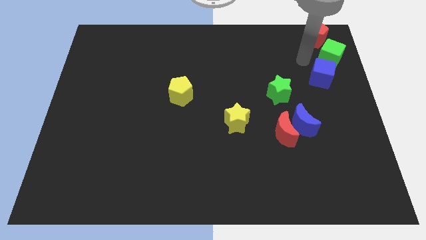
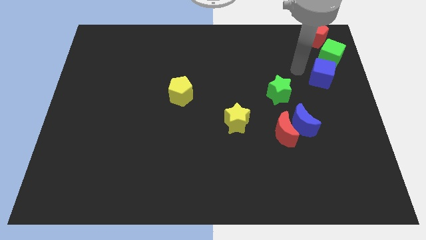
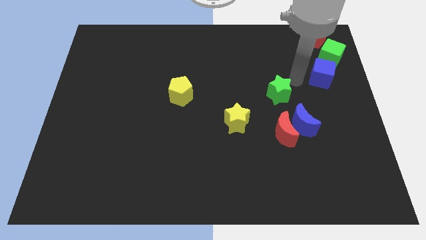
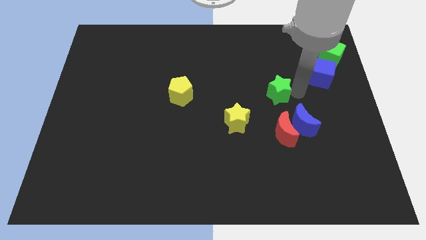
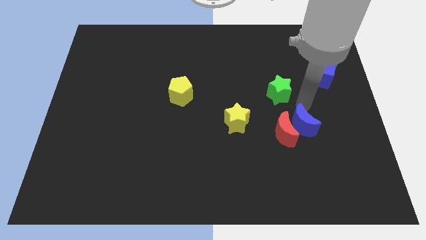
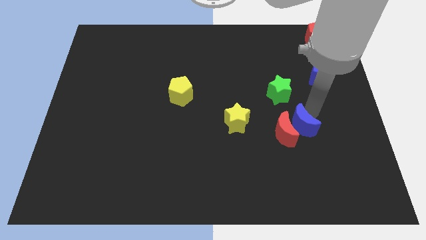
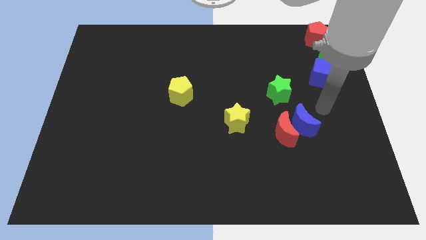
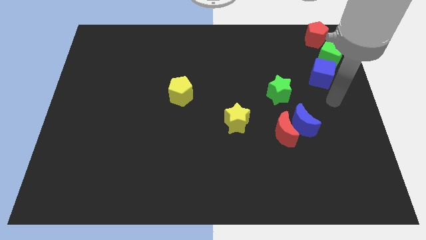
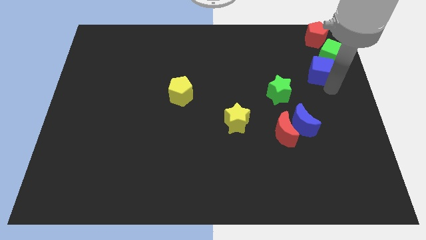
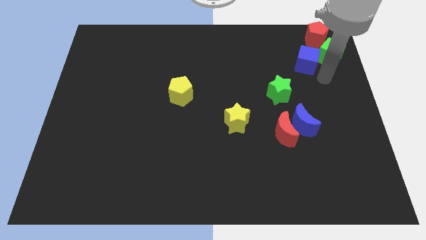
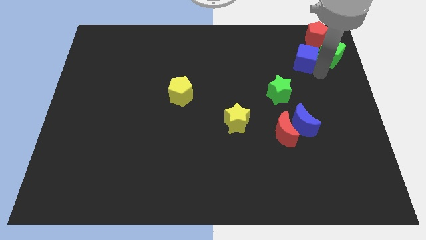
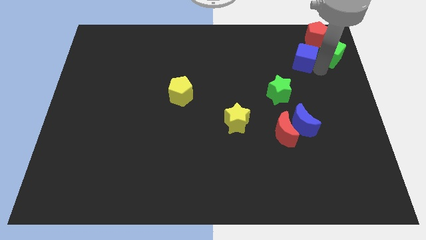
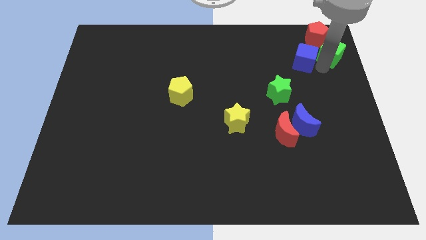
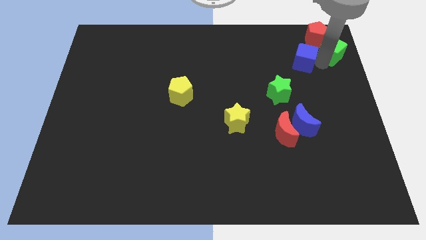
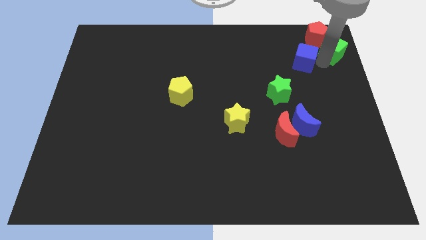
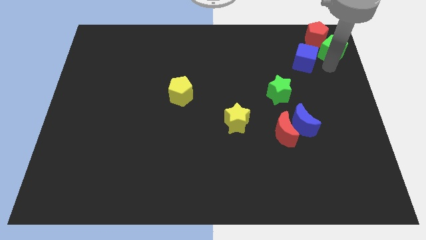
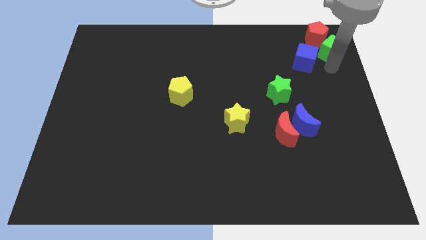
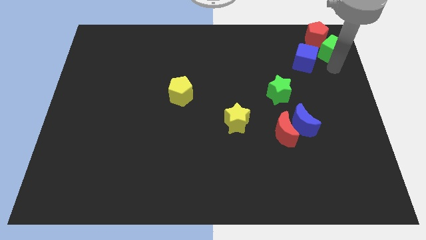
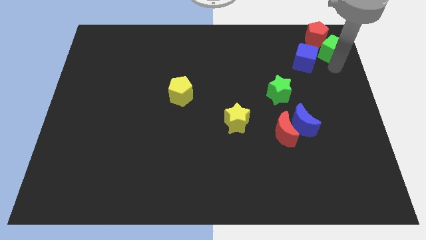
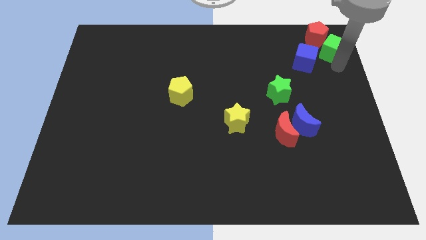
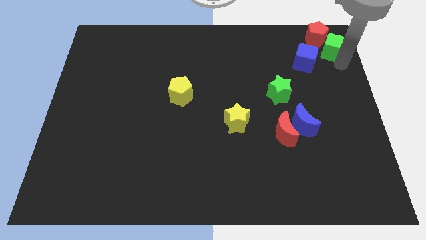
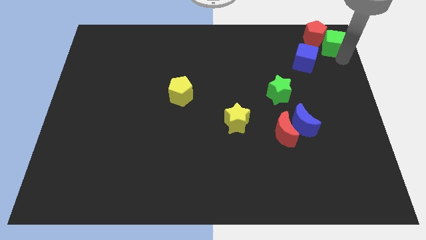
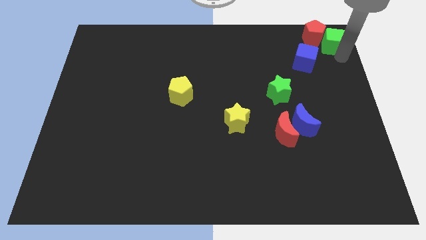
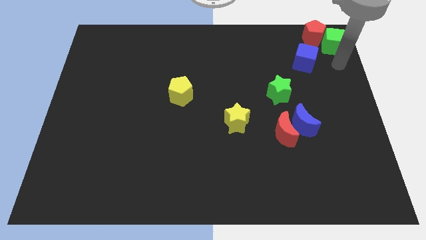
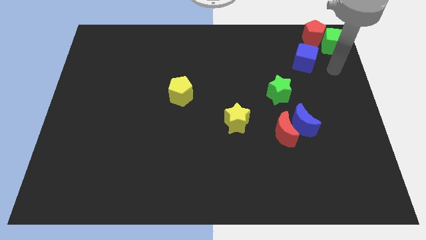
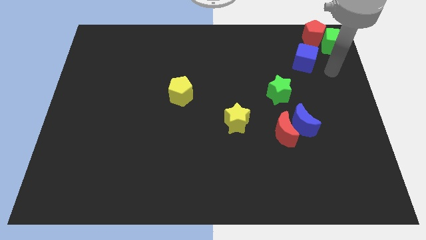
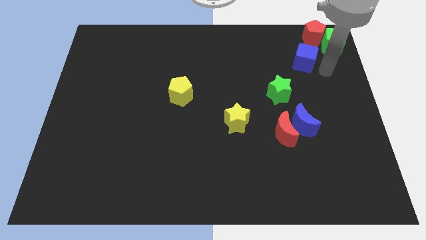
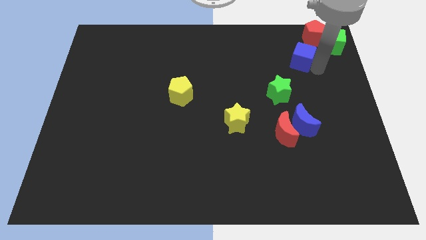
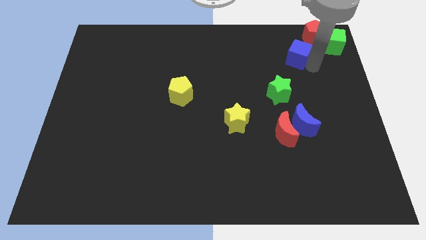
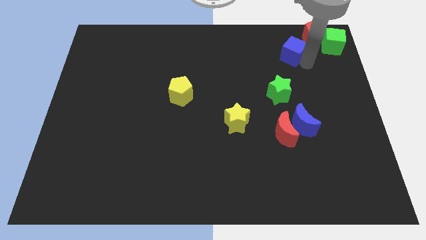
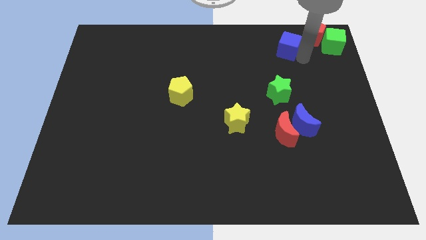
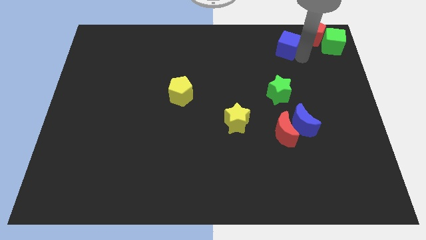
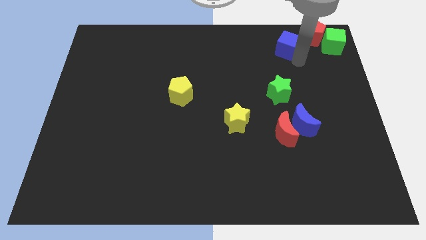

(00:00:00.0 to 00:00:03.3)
arrange the blue and green cubes to move the red pentagon

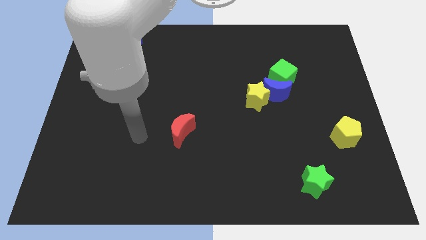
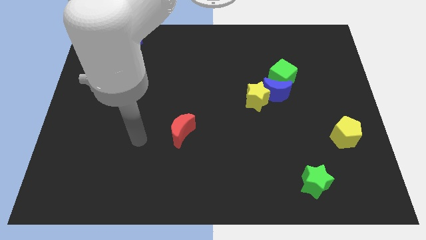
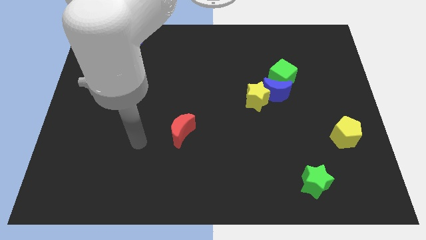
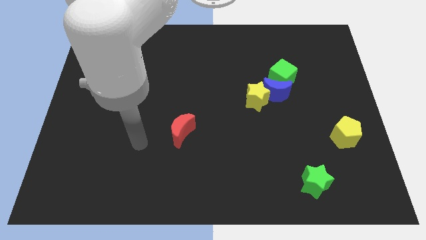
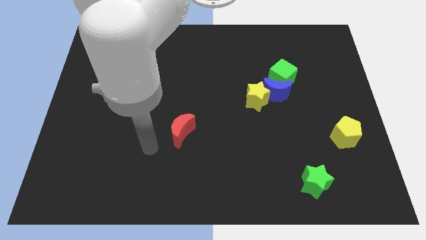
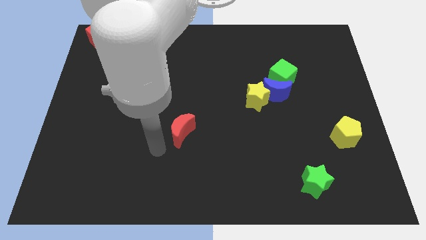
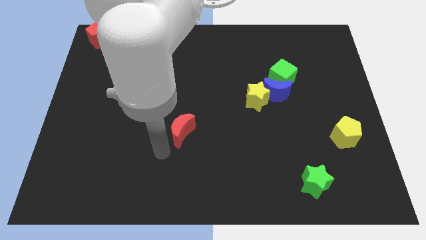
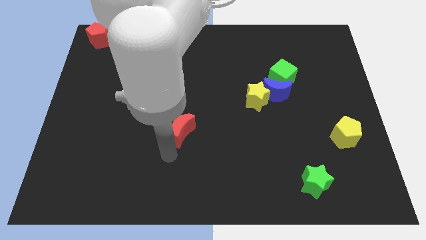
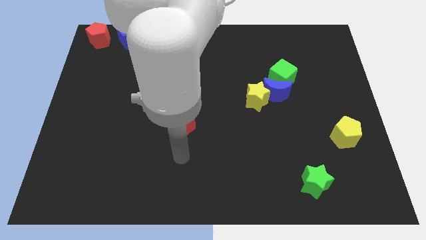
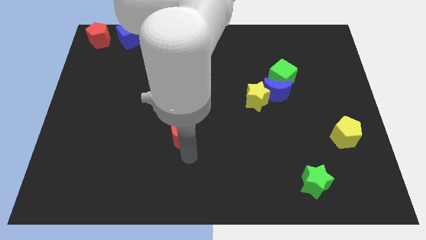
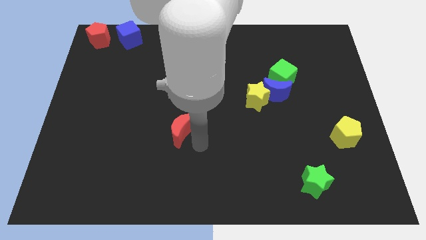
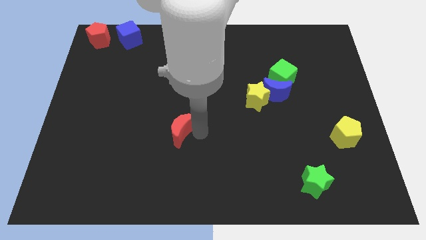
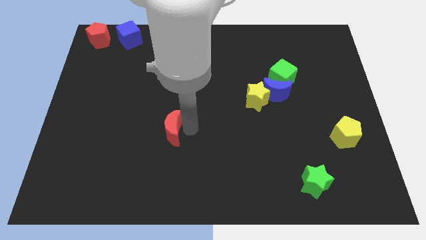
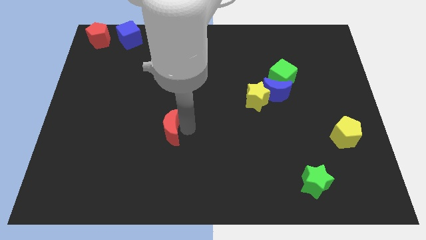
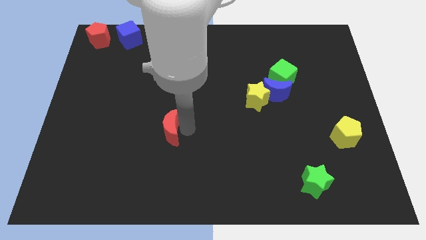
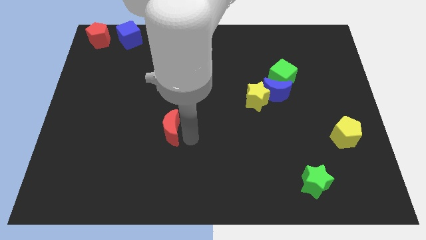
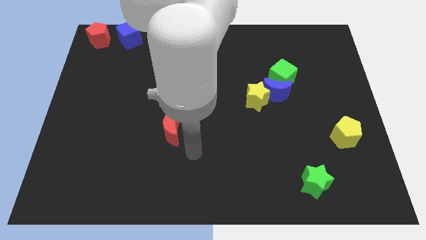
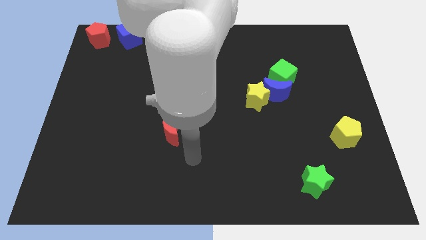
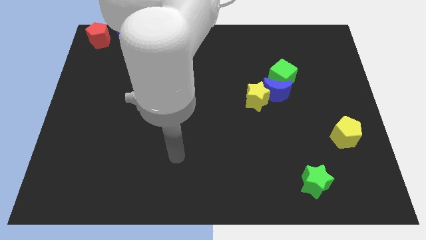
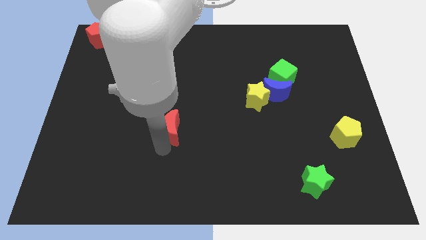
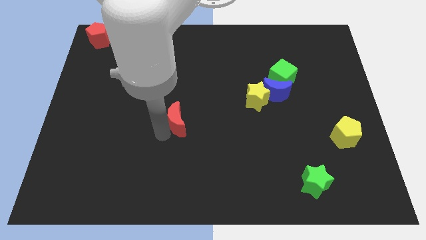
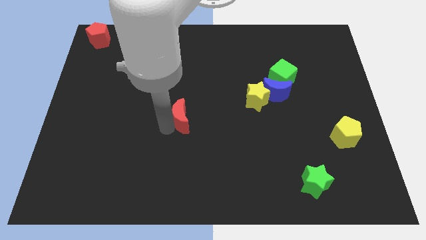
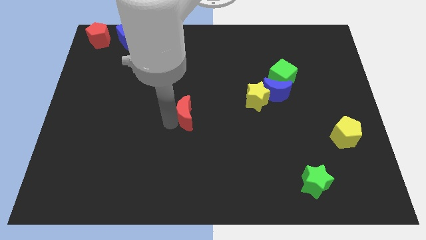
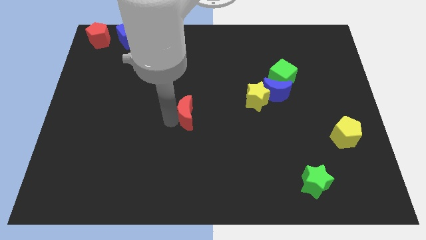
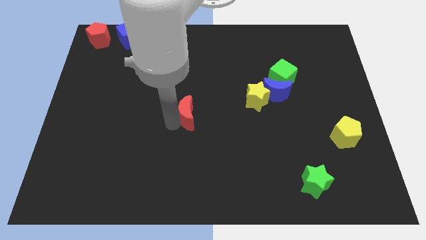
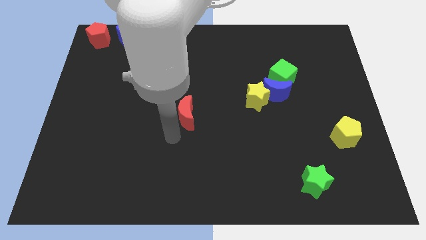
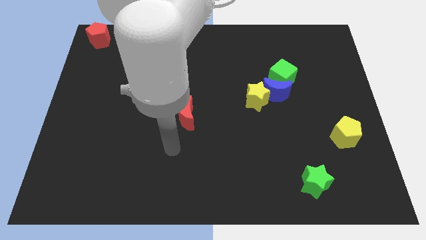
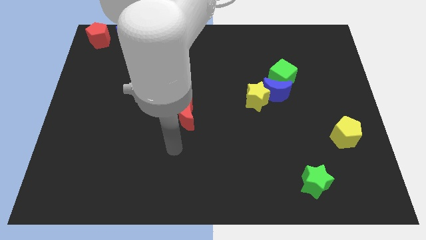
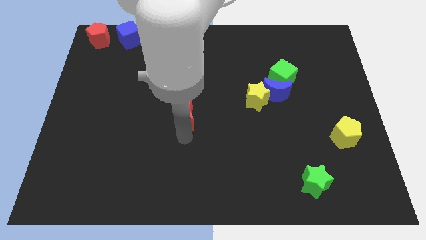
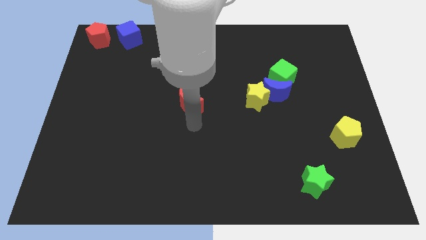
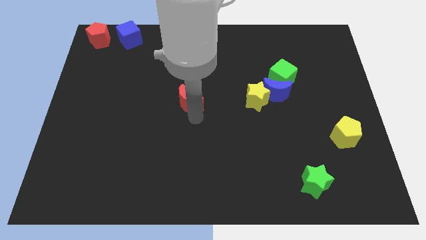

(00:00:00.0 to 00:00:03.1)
place red moon parallel left to yellow star

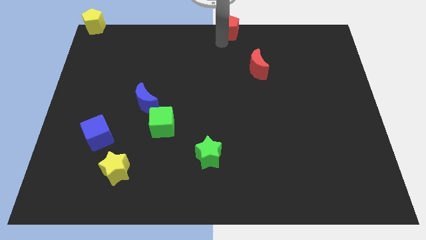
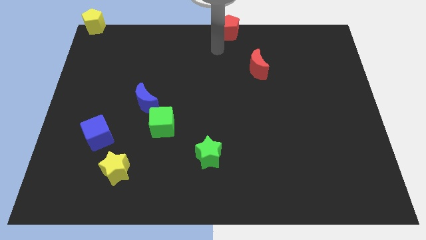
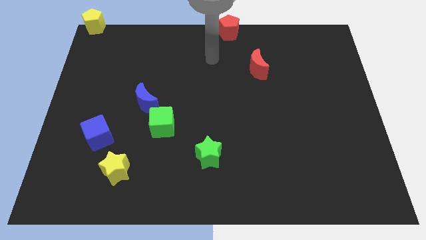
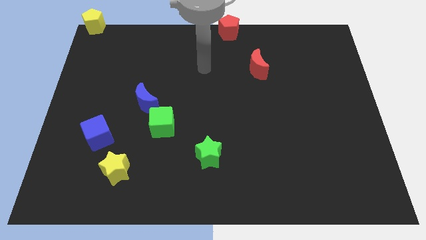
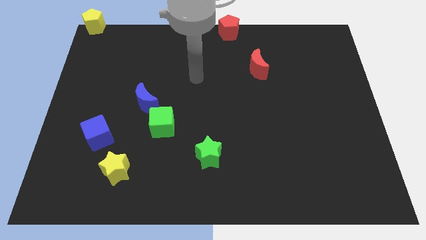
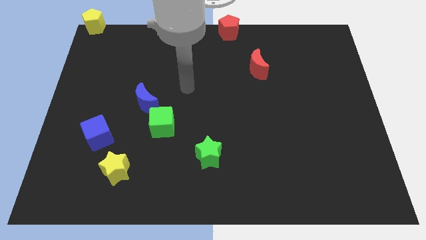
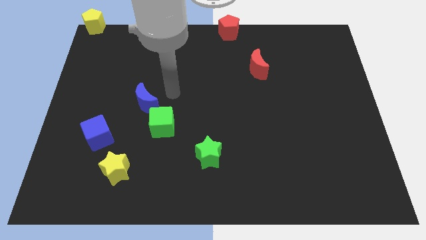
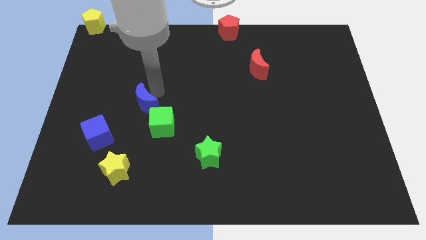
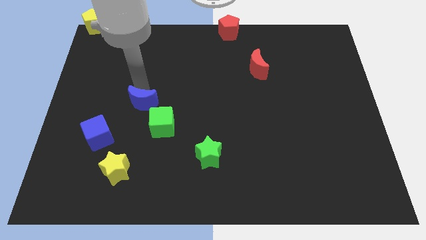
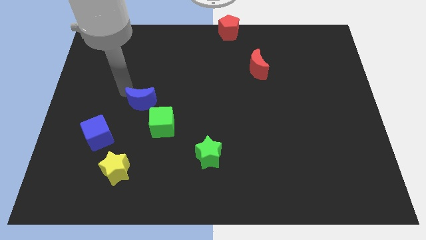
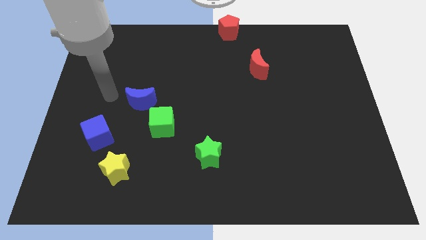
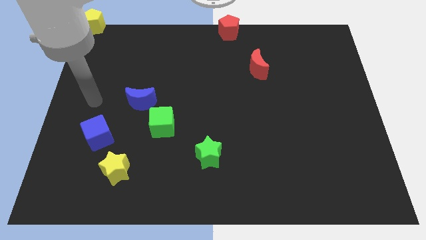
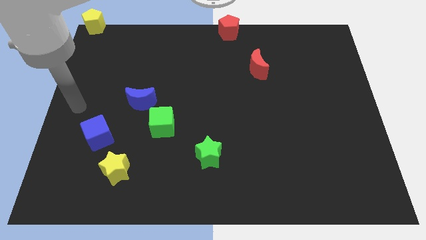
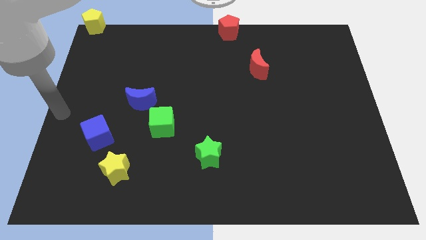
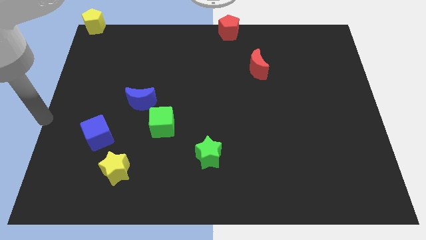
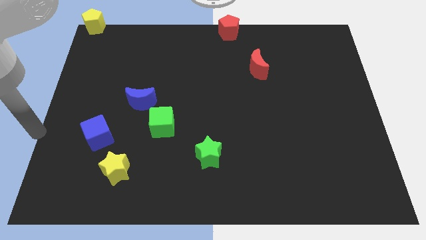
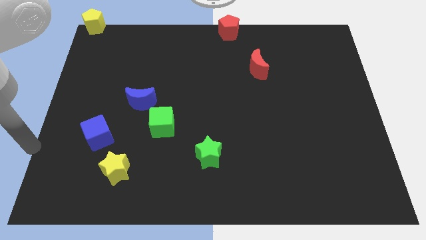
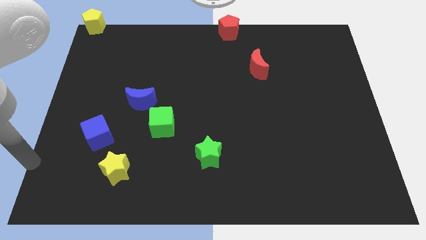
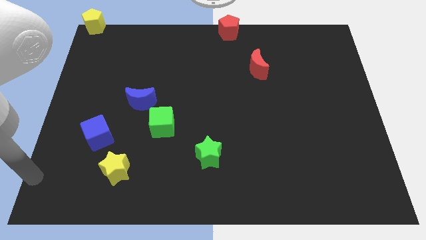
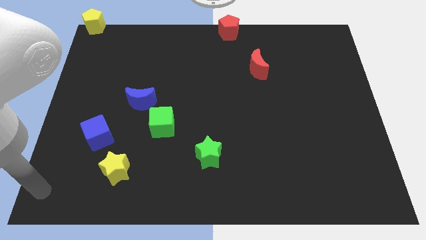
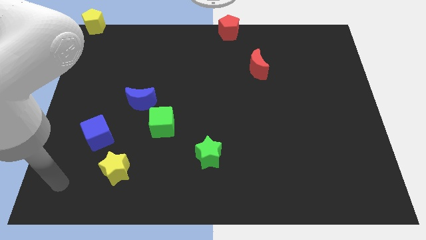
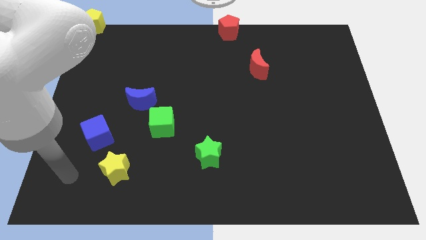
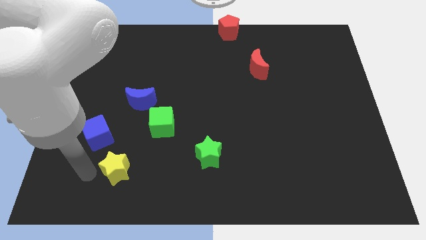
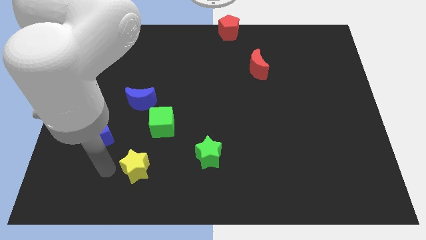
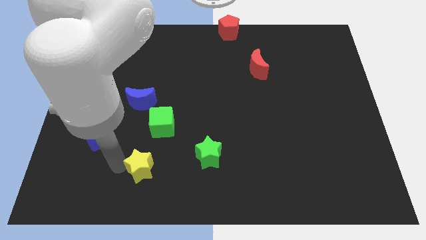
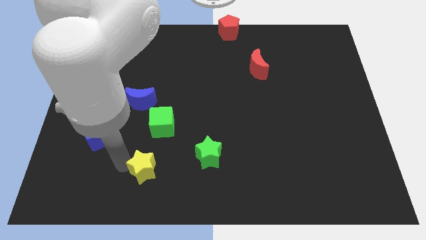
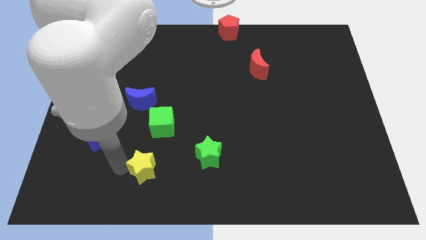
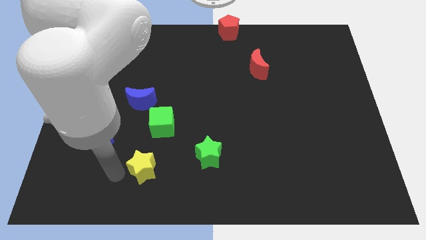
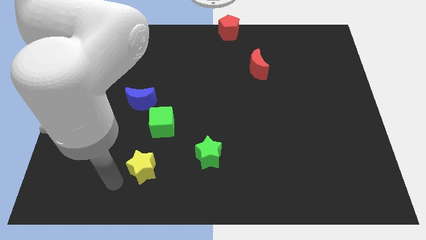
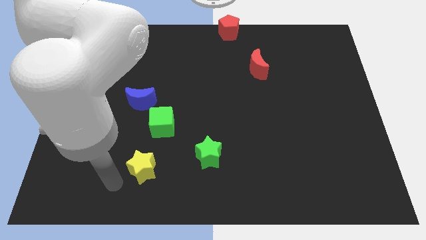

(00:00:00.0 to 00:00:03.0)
slightly touch to the blue moon
